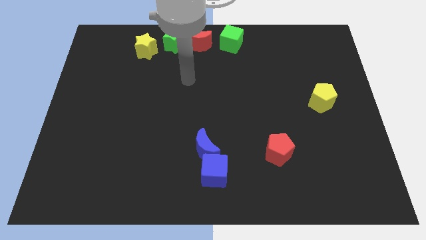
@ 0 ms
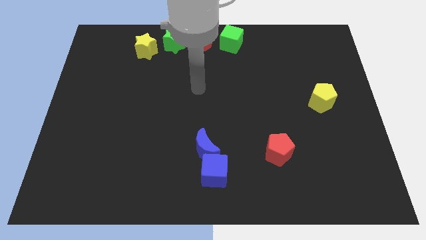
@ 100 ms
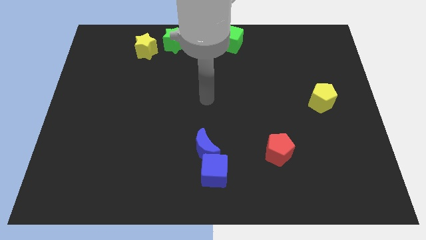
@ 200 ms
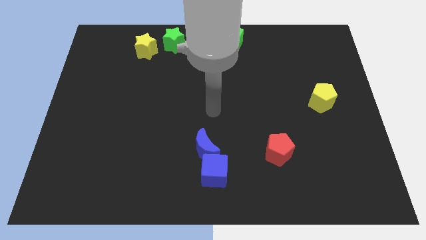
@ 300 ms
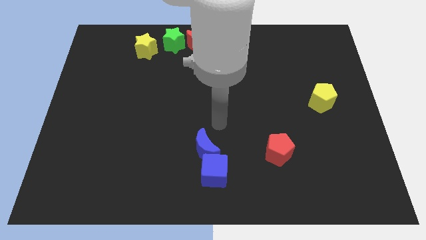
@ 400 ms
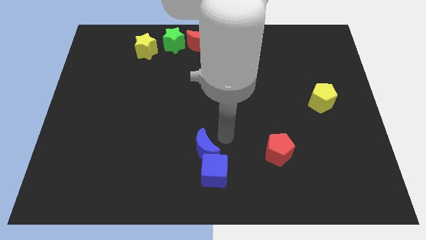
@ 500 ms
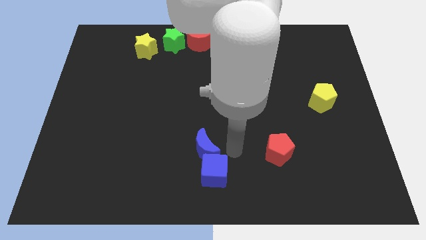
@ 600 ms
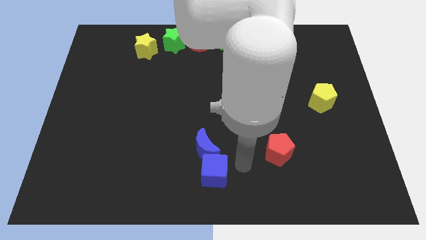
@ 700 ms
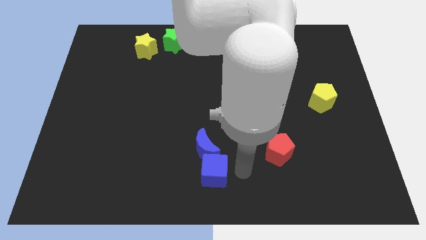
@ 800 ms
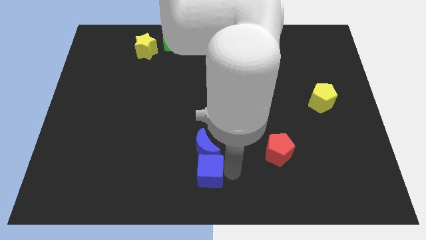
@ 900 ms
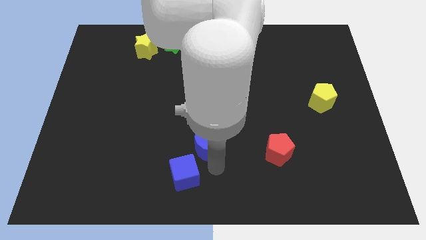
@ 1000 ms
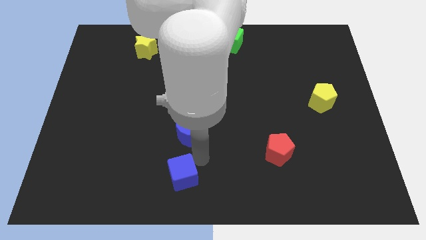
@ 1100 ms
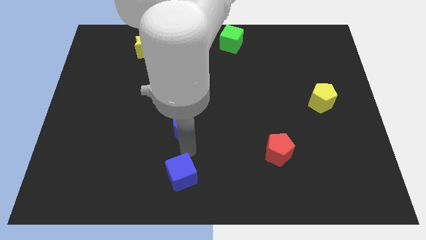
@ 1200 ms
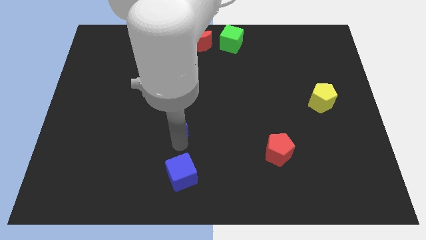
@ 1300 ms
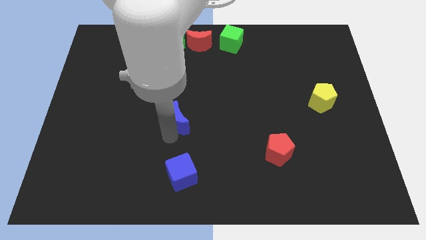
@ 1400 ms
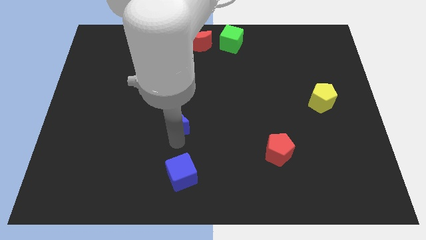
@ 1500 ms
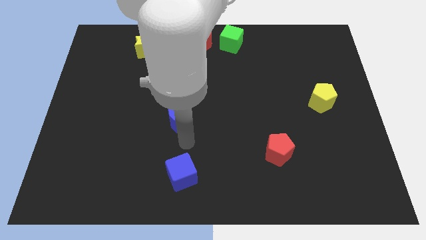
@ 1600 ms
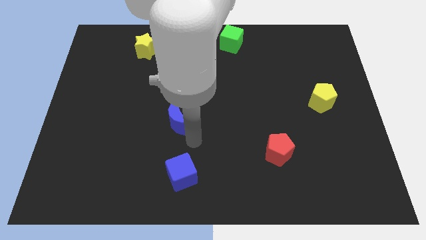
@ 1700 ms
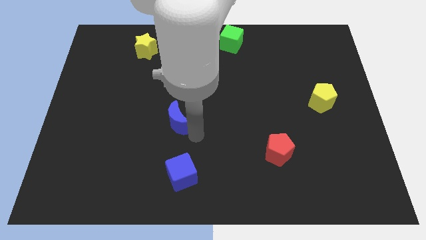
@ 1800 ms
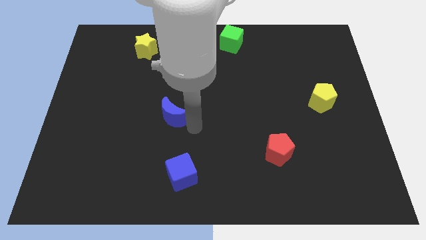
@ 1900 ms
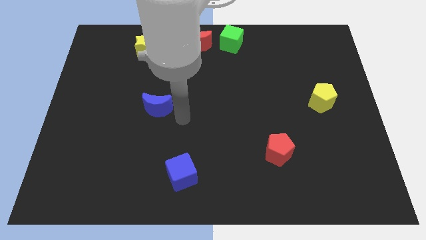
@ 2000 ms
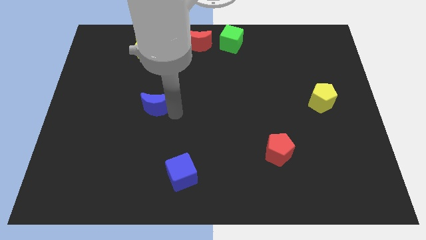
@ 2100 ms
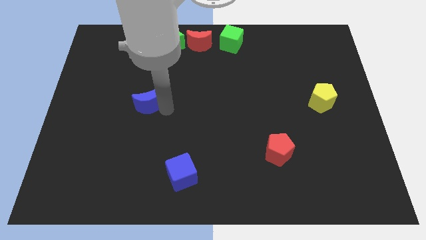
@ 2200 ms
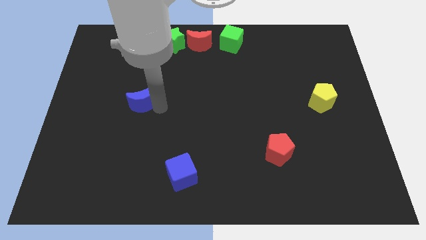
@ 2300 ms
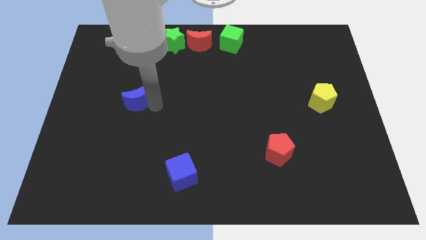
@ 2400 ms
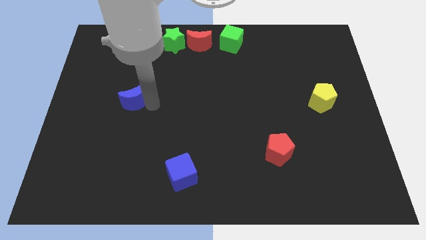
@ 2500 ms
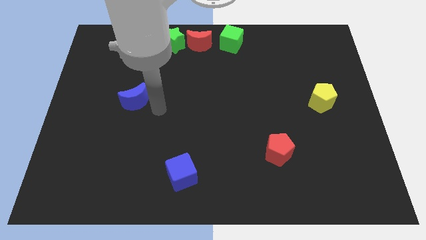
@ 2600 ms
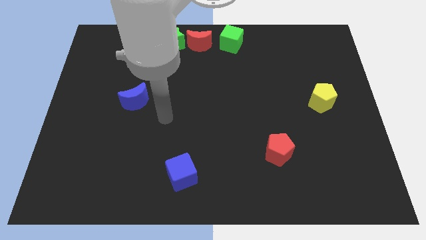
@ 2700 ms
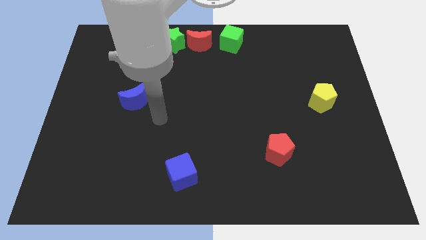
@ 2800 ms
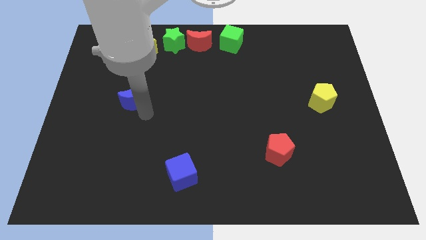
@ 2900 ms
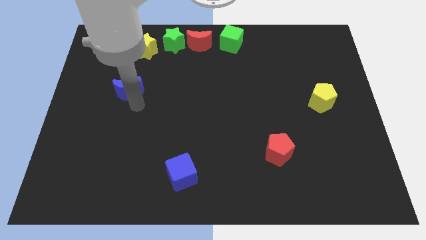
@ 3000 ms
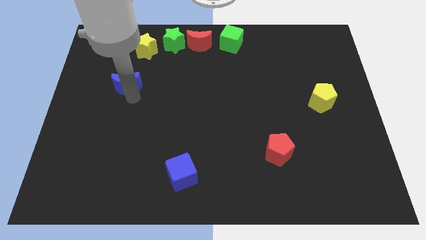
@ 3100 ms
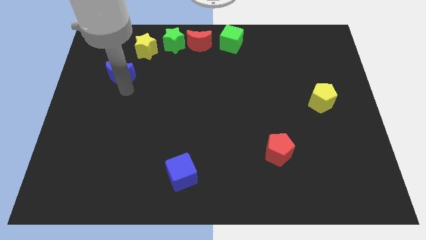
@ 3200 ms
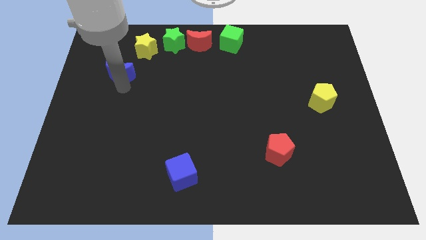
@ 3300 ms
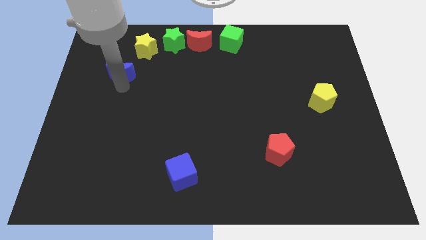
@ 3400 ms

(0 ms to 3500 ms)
move the blue moon diagonal to the blue cube

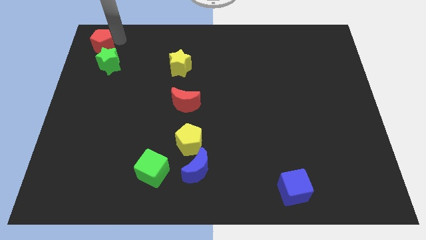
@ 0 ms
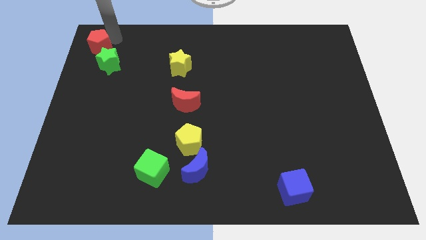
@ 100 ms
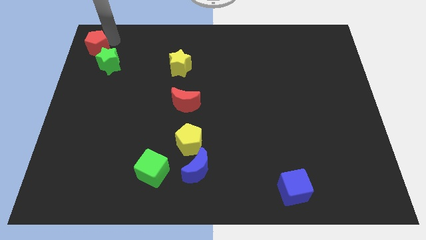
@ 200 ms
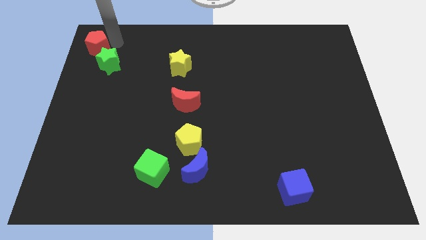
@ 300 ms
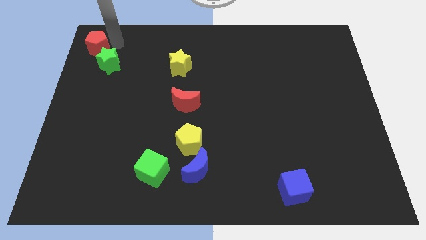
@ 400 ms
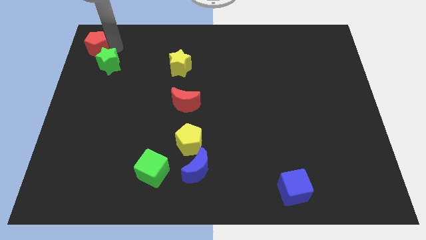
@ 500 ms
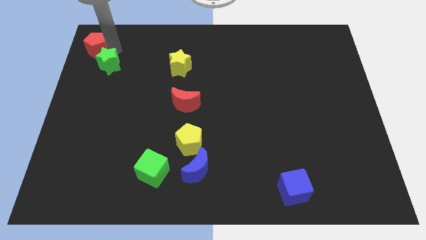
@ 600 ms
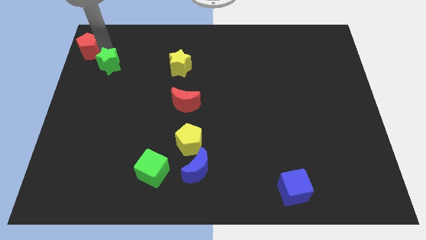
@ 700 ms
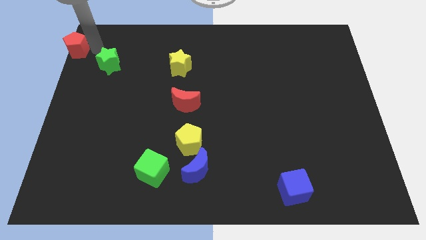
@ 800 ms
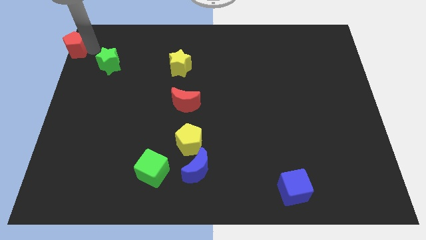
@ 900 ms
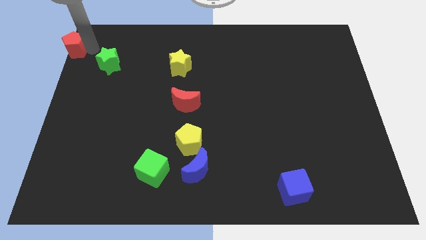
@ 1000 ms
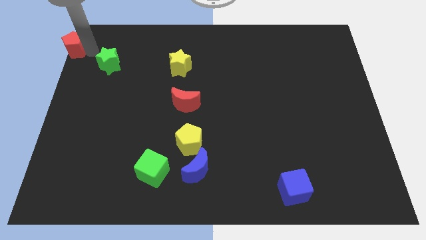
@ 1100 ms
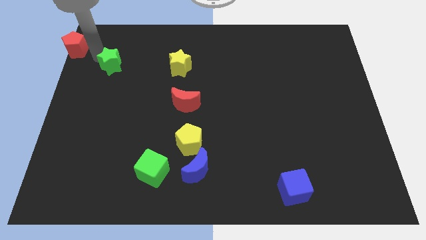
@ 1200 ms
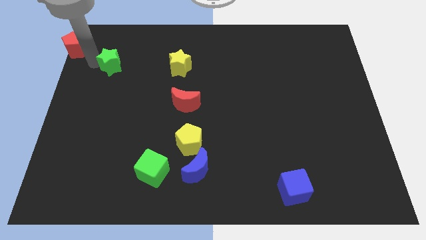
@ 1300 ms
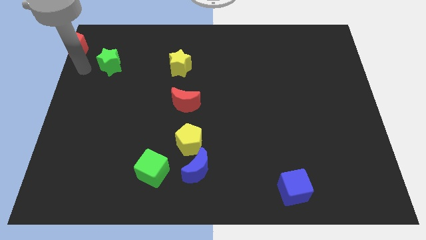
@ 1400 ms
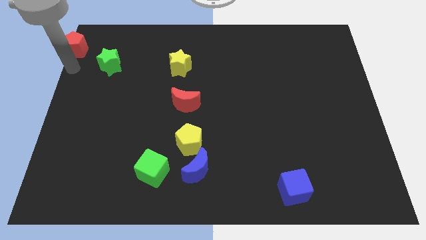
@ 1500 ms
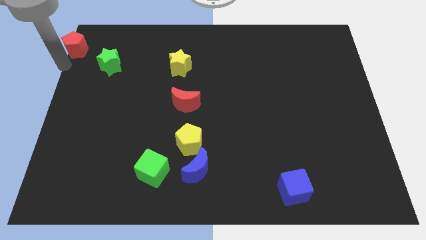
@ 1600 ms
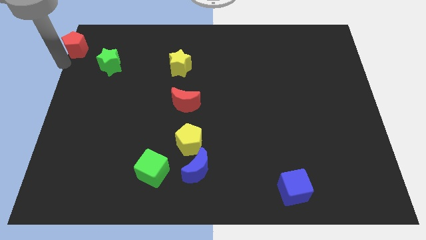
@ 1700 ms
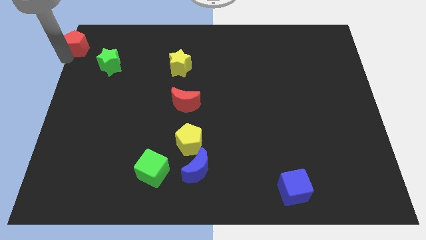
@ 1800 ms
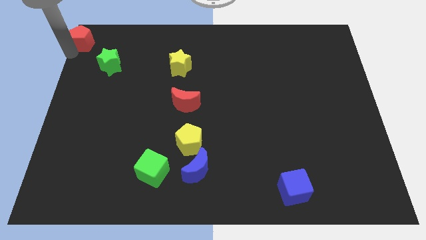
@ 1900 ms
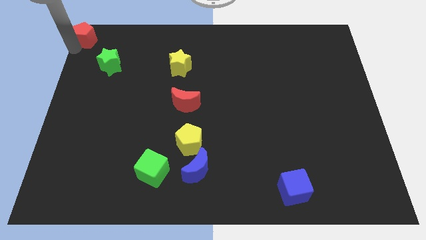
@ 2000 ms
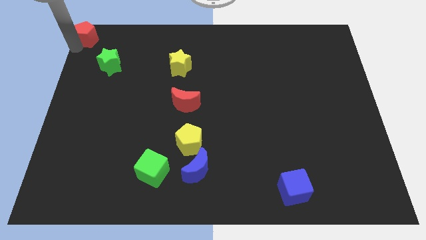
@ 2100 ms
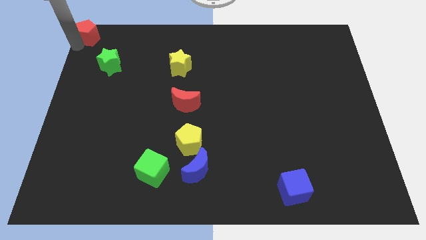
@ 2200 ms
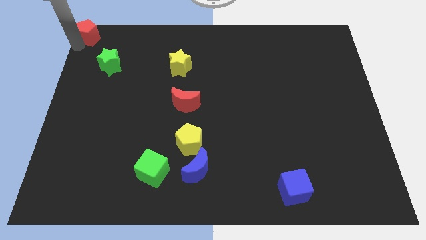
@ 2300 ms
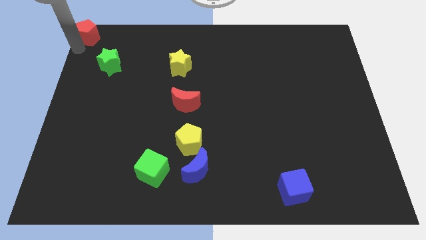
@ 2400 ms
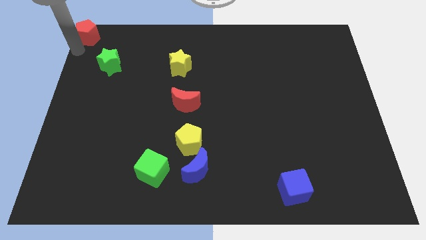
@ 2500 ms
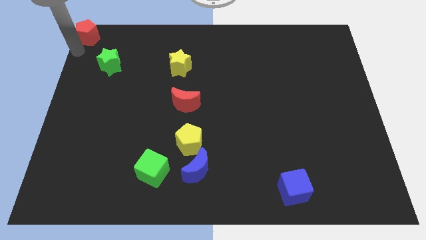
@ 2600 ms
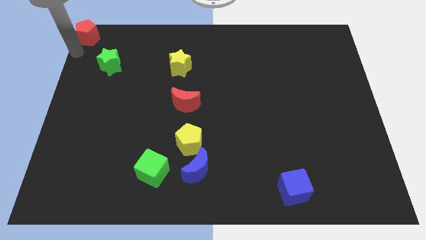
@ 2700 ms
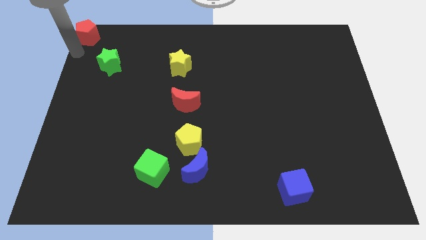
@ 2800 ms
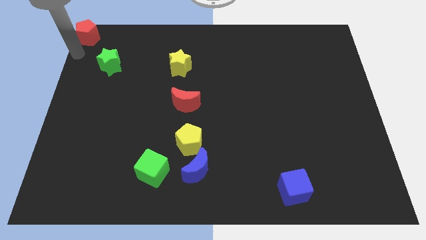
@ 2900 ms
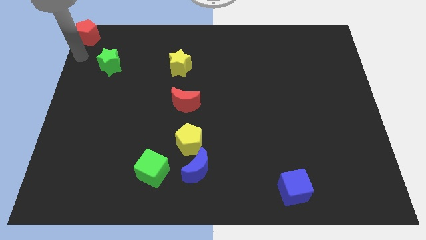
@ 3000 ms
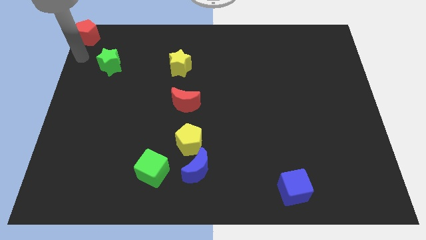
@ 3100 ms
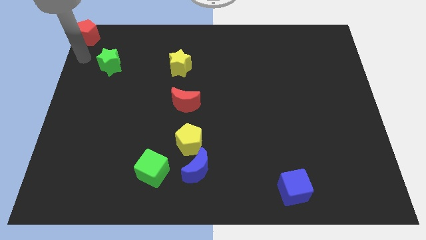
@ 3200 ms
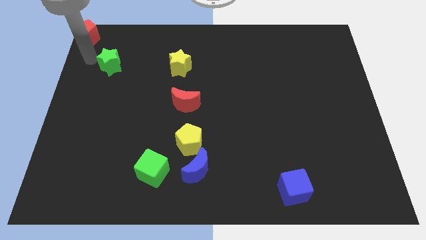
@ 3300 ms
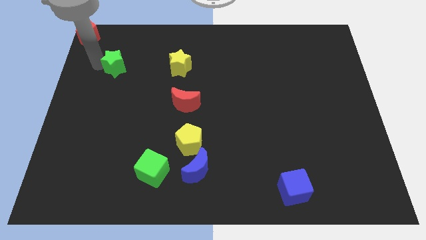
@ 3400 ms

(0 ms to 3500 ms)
place red pentagon diagonally left above green star

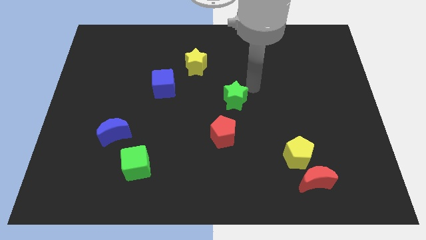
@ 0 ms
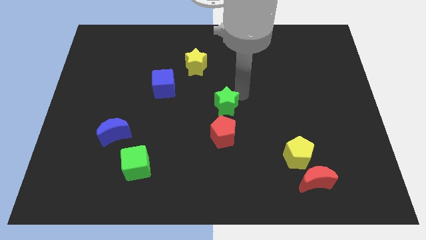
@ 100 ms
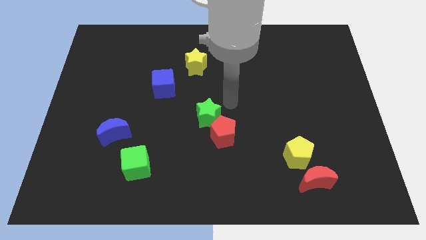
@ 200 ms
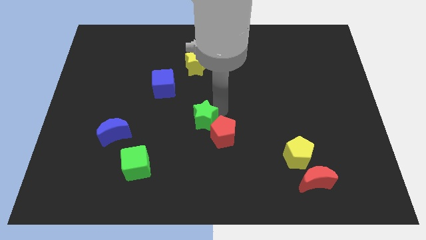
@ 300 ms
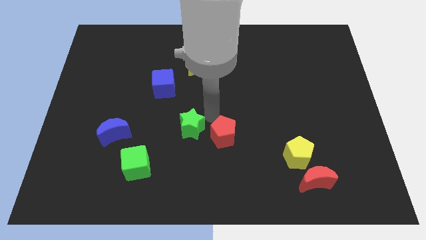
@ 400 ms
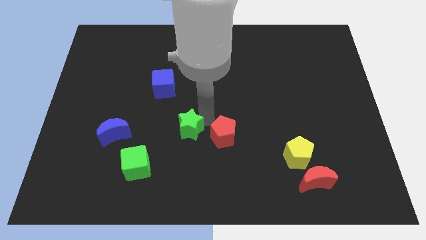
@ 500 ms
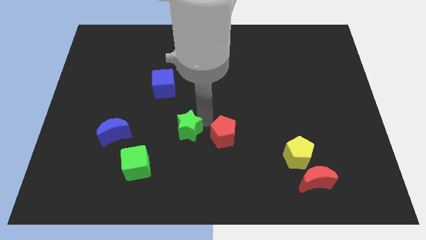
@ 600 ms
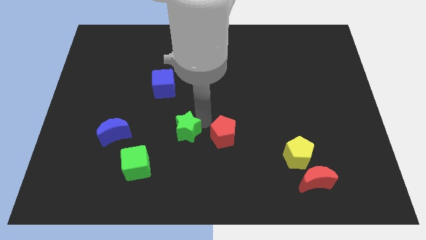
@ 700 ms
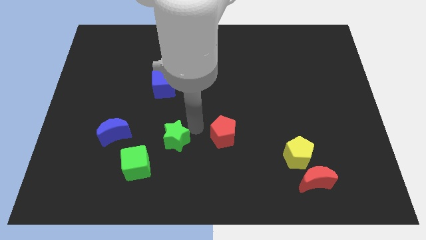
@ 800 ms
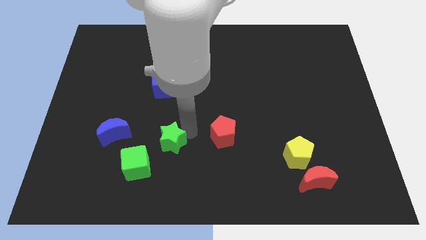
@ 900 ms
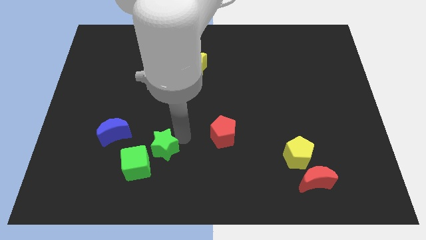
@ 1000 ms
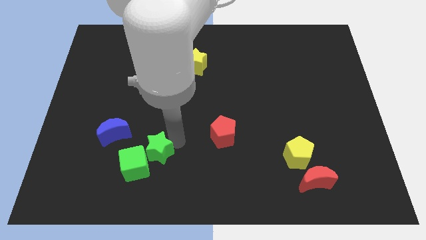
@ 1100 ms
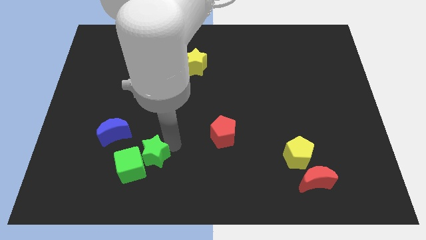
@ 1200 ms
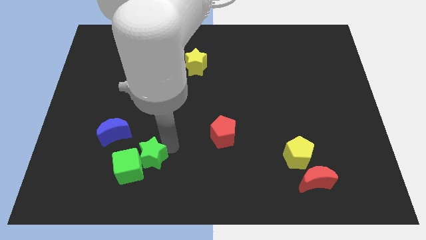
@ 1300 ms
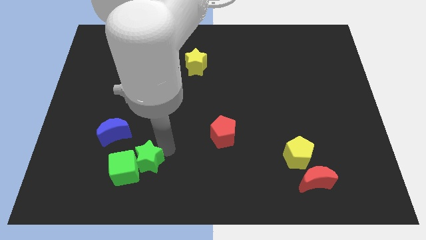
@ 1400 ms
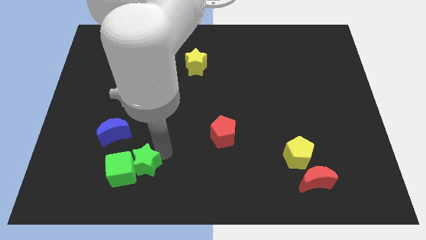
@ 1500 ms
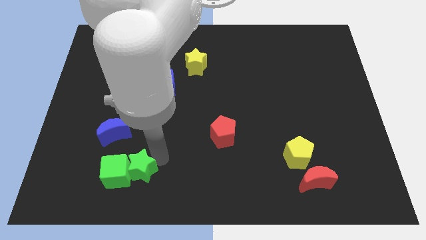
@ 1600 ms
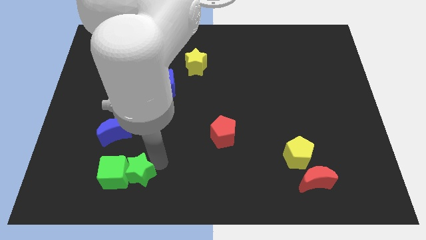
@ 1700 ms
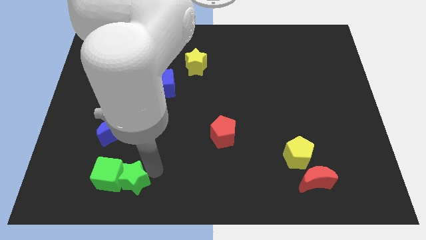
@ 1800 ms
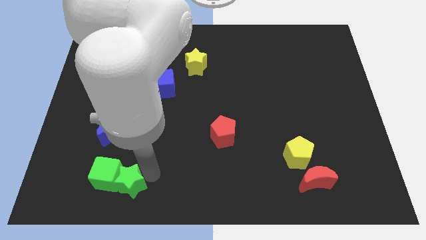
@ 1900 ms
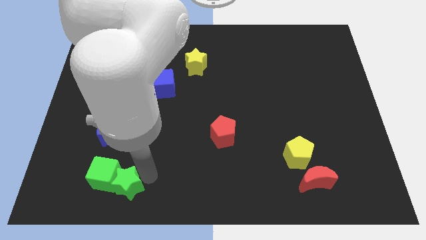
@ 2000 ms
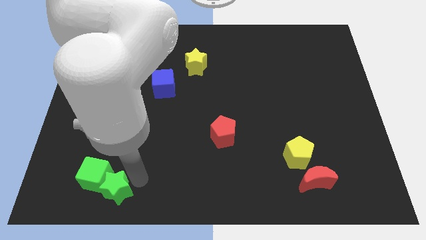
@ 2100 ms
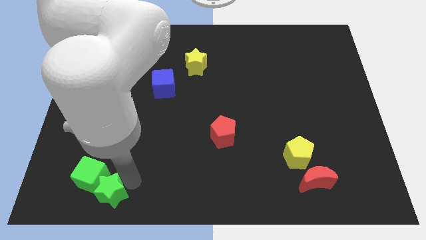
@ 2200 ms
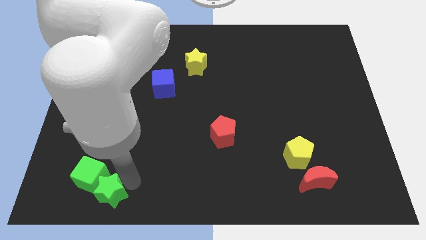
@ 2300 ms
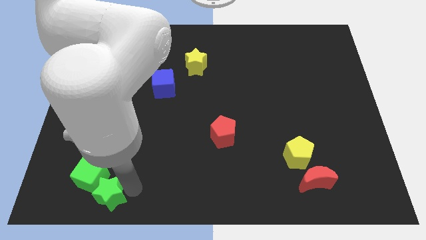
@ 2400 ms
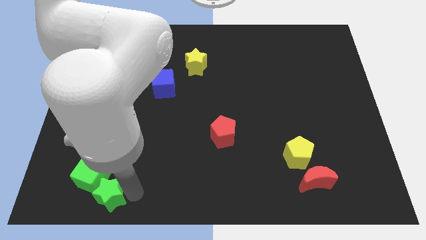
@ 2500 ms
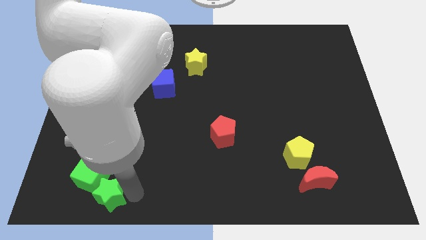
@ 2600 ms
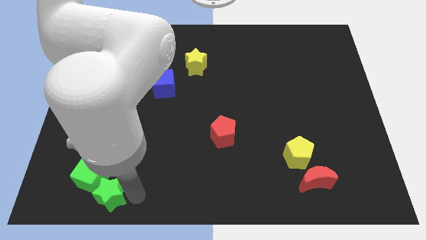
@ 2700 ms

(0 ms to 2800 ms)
place green star to the bottom of blue moon
